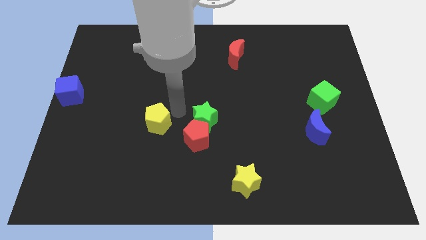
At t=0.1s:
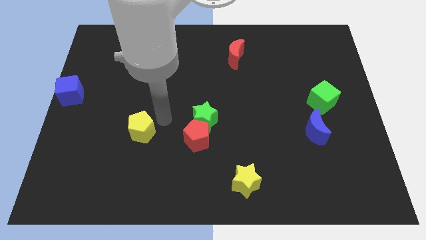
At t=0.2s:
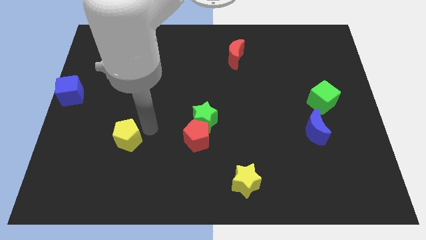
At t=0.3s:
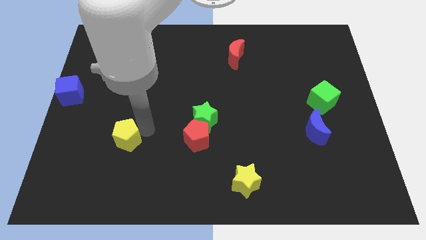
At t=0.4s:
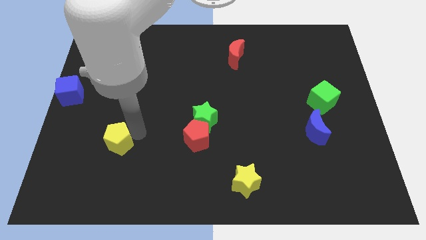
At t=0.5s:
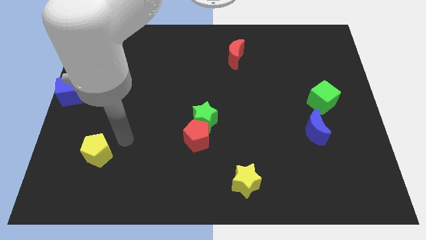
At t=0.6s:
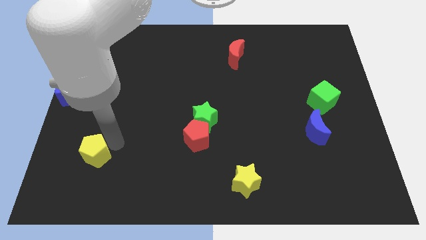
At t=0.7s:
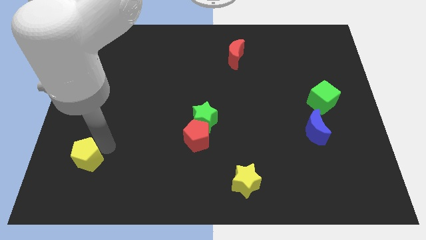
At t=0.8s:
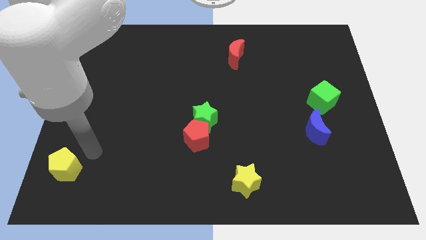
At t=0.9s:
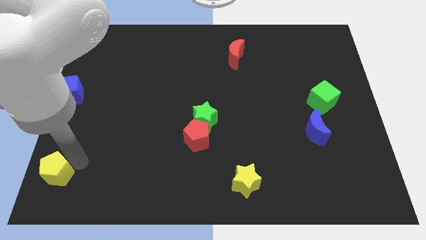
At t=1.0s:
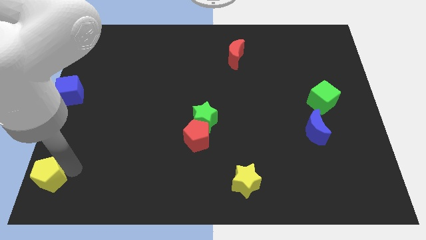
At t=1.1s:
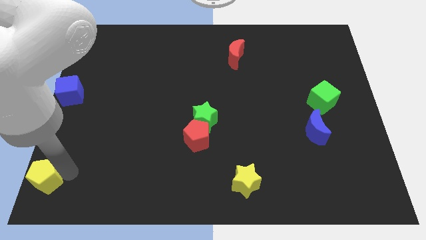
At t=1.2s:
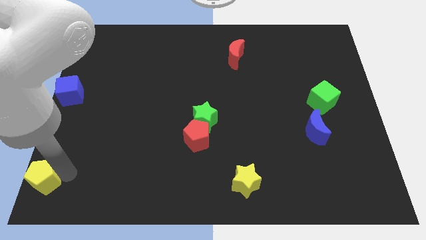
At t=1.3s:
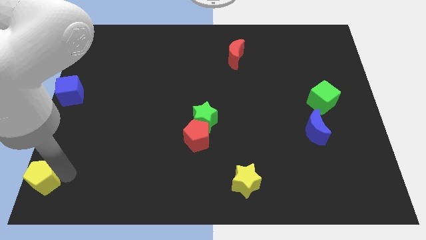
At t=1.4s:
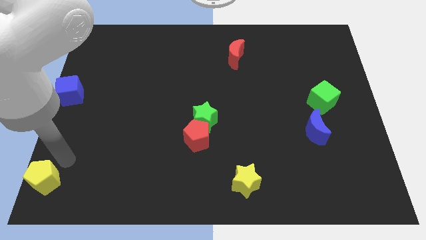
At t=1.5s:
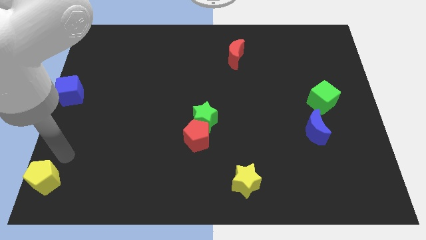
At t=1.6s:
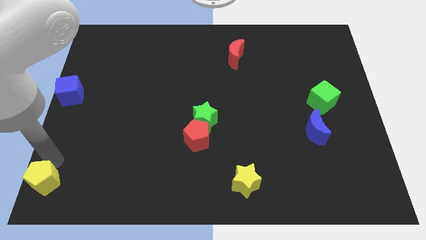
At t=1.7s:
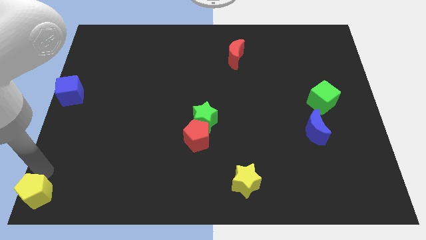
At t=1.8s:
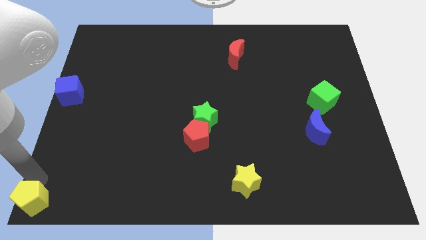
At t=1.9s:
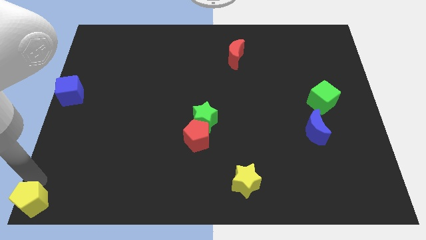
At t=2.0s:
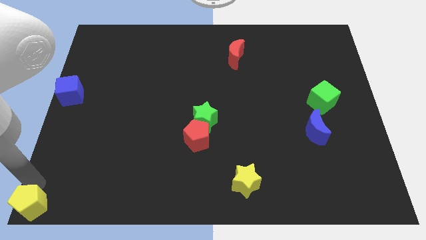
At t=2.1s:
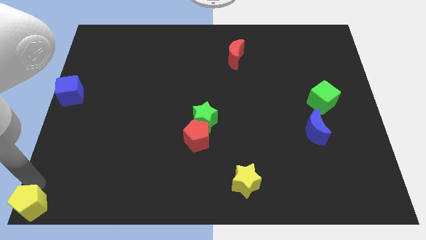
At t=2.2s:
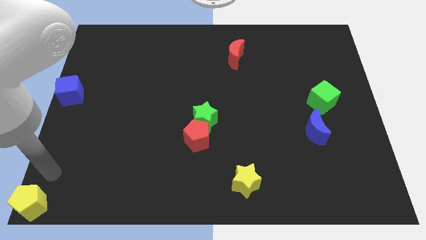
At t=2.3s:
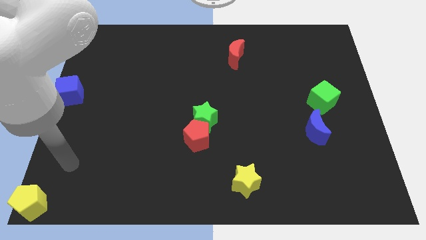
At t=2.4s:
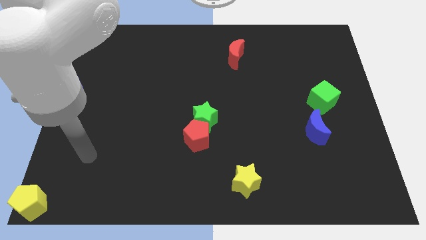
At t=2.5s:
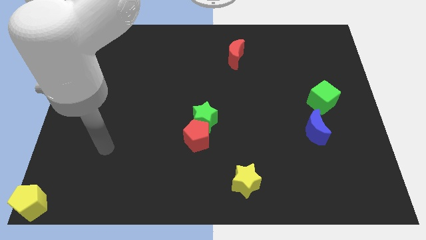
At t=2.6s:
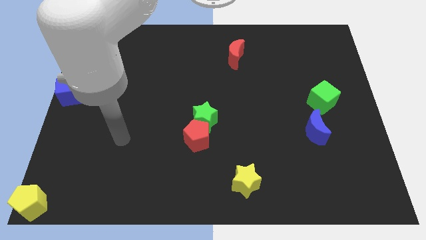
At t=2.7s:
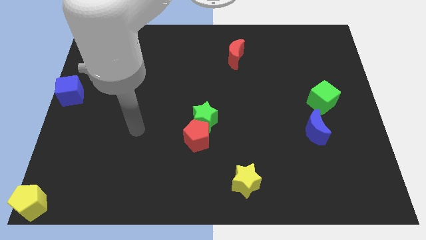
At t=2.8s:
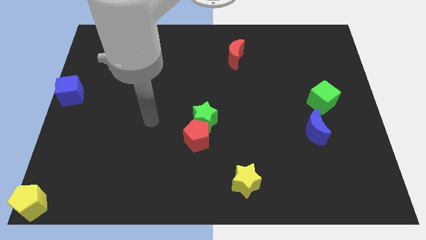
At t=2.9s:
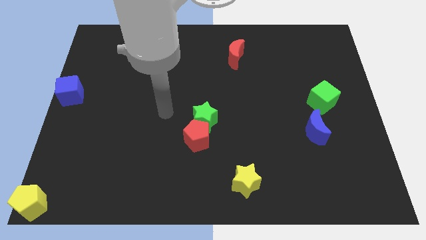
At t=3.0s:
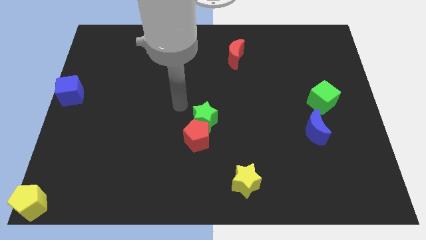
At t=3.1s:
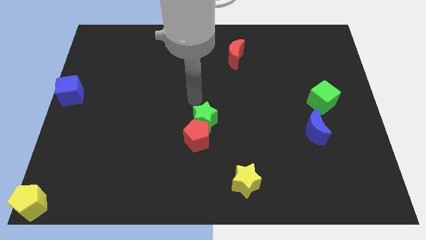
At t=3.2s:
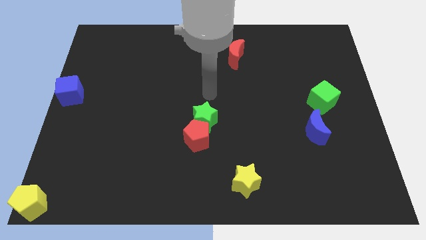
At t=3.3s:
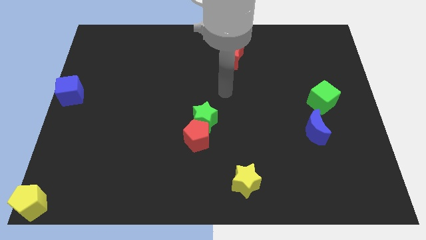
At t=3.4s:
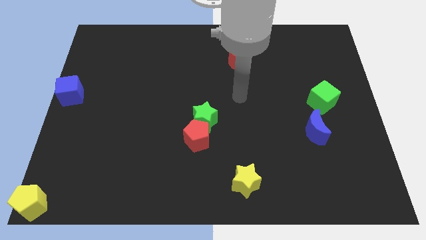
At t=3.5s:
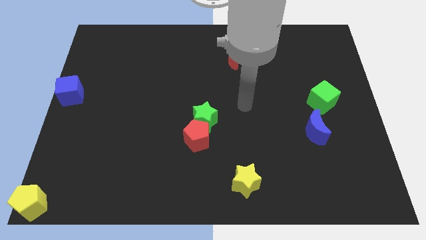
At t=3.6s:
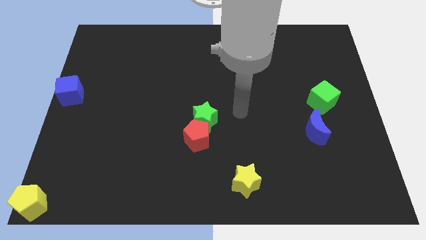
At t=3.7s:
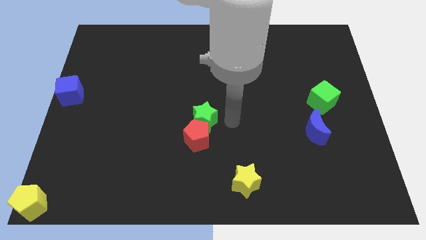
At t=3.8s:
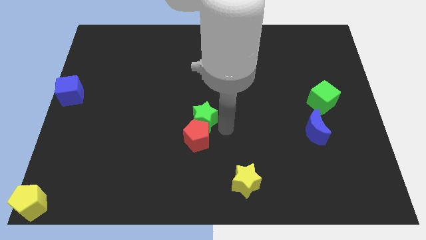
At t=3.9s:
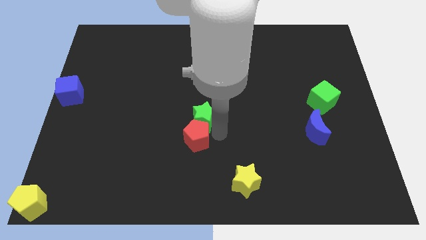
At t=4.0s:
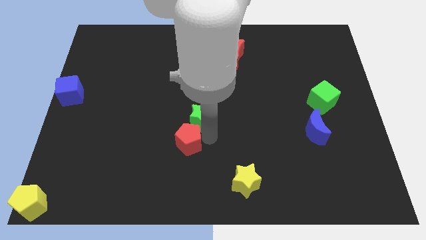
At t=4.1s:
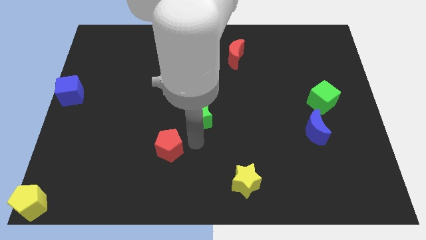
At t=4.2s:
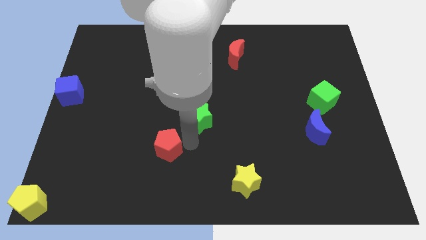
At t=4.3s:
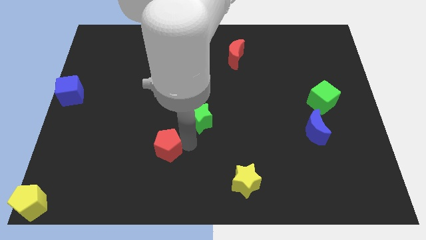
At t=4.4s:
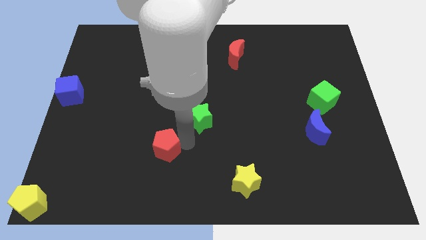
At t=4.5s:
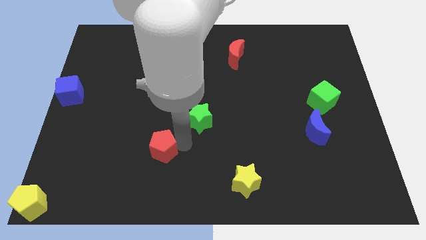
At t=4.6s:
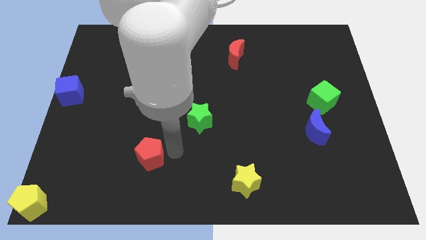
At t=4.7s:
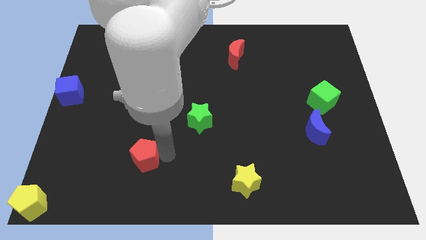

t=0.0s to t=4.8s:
place the yellow pentagon towards the bottom left corner of the board

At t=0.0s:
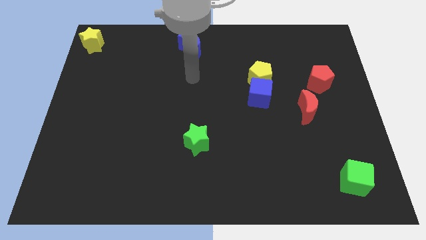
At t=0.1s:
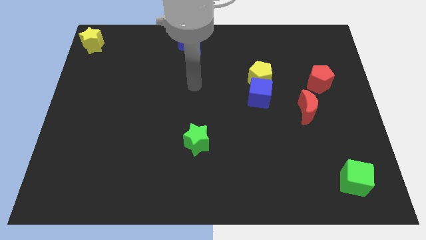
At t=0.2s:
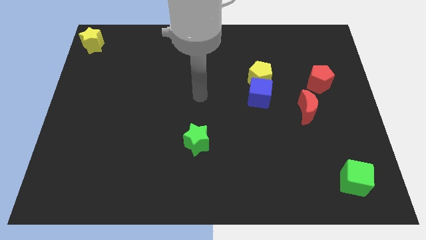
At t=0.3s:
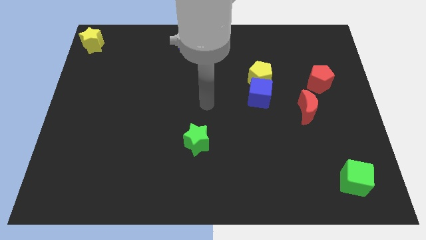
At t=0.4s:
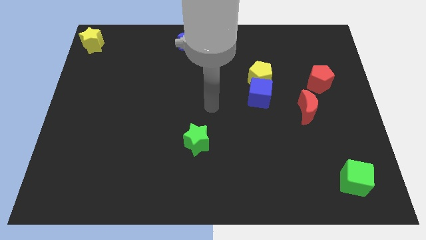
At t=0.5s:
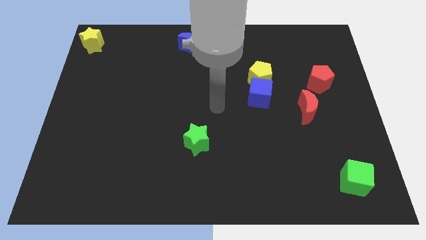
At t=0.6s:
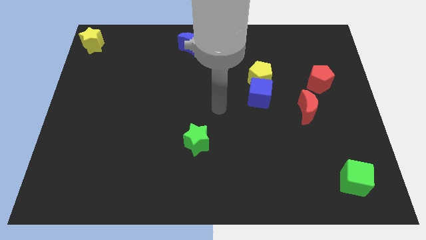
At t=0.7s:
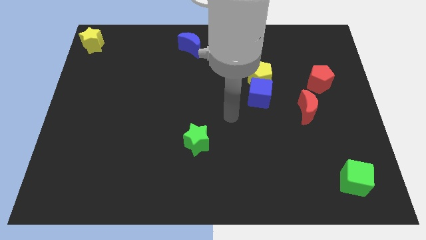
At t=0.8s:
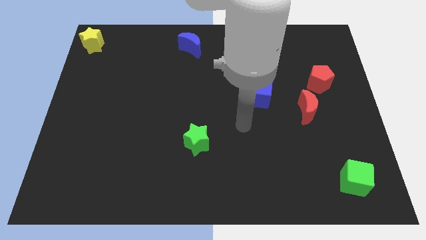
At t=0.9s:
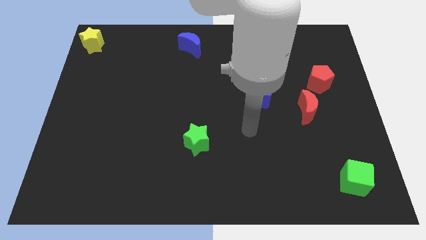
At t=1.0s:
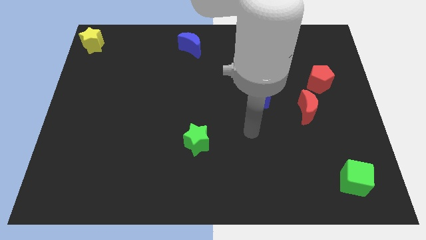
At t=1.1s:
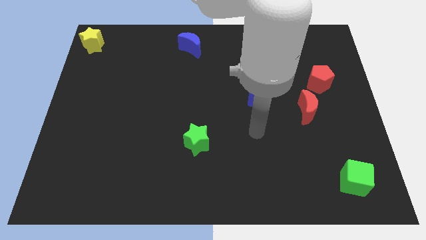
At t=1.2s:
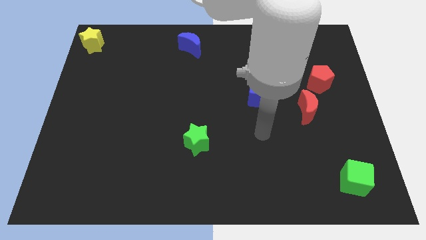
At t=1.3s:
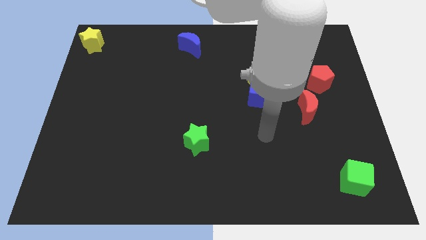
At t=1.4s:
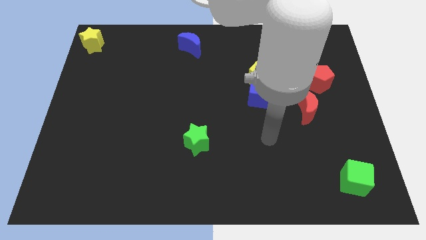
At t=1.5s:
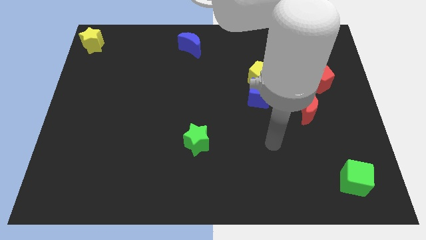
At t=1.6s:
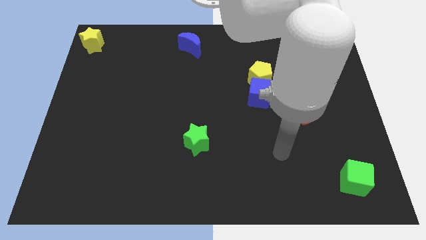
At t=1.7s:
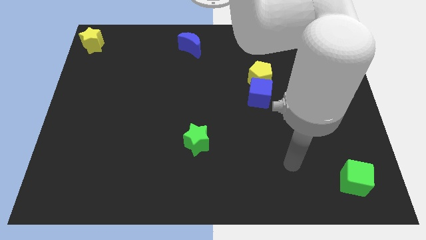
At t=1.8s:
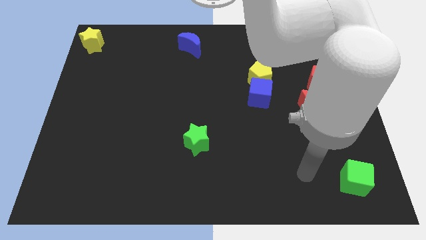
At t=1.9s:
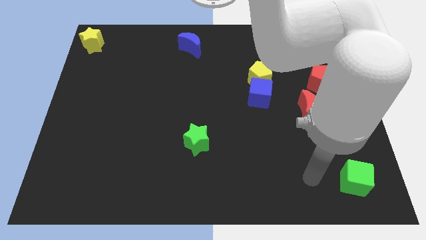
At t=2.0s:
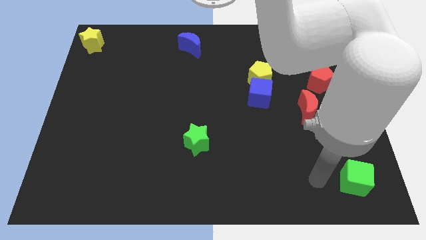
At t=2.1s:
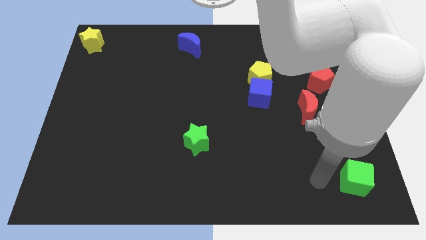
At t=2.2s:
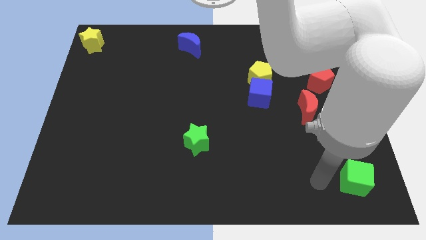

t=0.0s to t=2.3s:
point your arm at the left of the green cube

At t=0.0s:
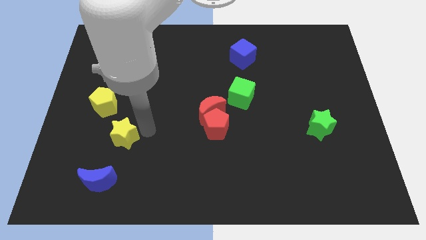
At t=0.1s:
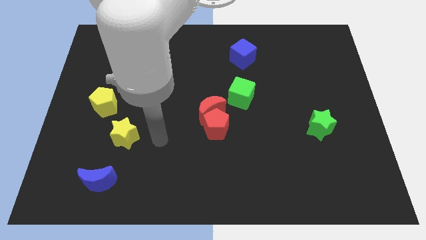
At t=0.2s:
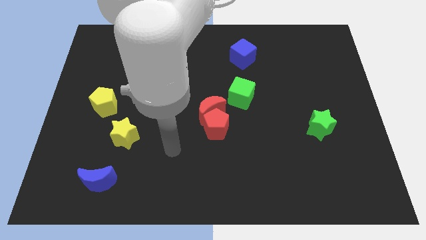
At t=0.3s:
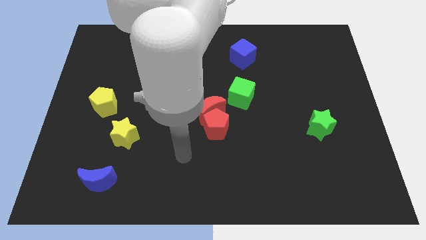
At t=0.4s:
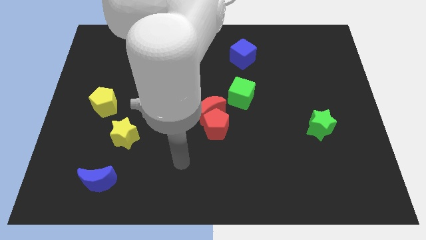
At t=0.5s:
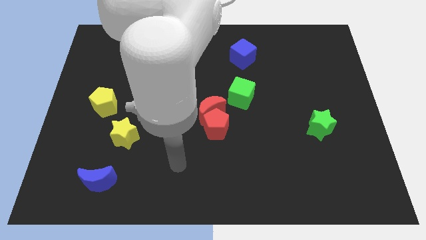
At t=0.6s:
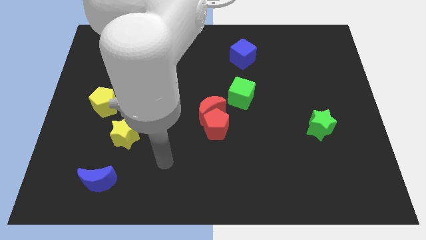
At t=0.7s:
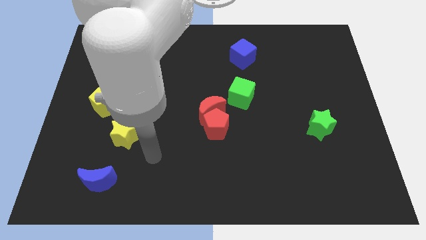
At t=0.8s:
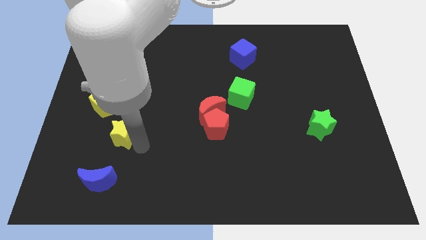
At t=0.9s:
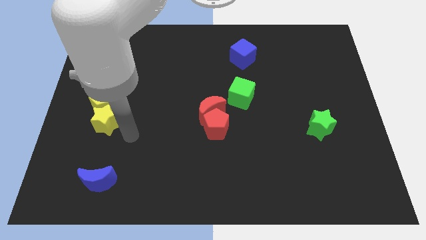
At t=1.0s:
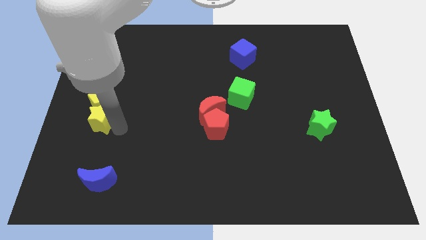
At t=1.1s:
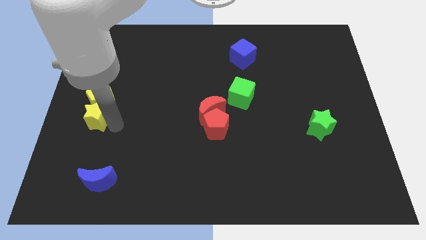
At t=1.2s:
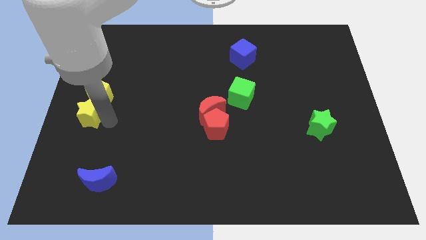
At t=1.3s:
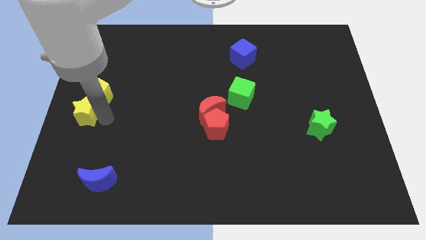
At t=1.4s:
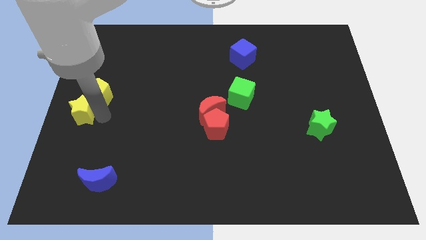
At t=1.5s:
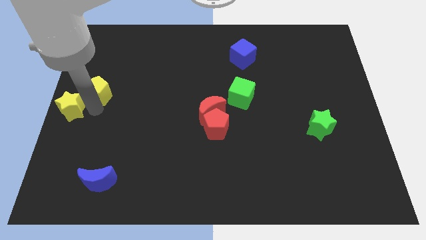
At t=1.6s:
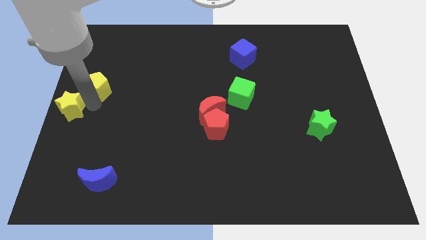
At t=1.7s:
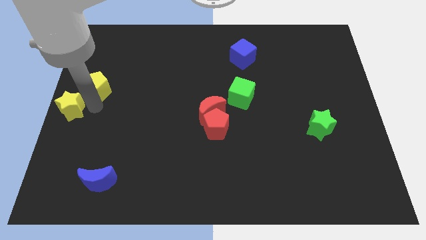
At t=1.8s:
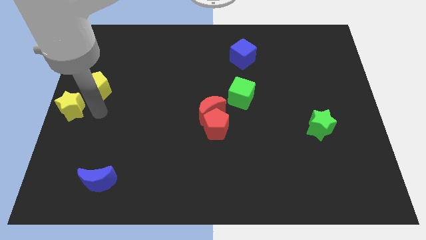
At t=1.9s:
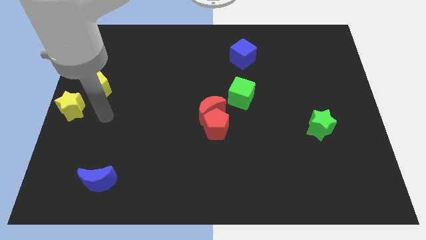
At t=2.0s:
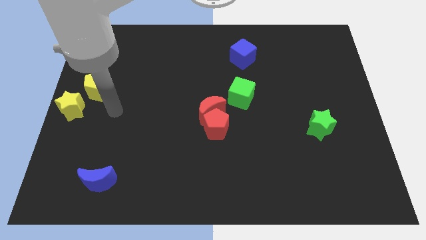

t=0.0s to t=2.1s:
move the yellow star to the center left
